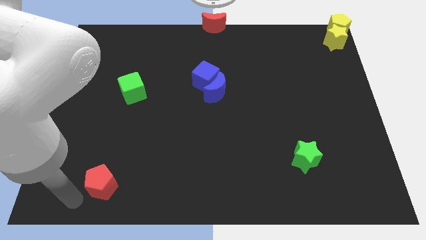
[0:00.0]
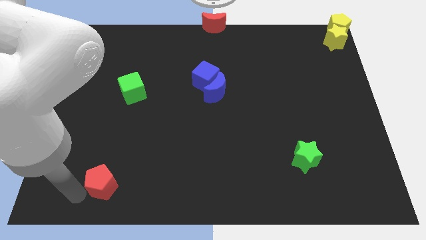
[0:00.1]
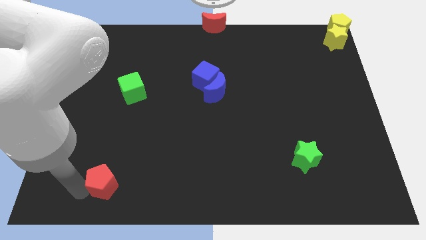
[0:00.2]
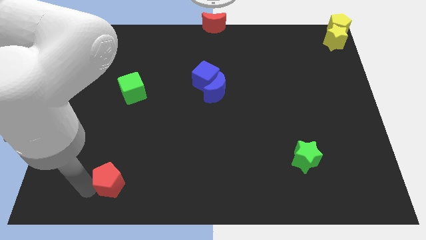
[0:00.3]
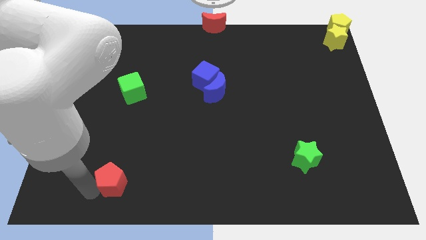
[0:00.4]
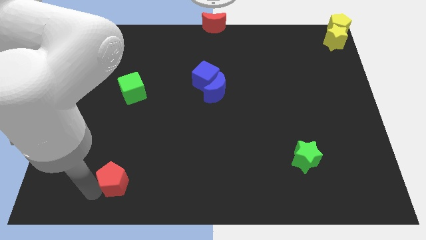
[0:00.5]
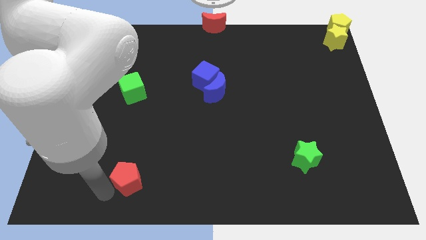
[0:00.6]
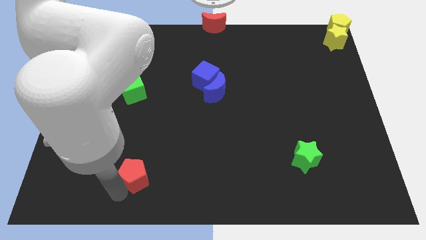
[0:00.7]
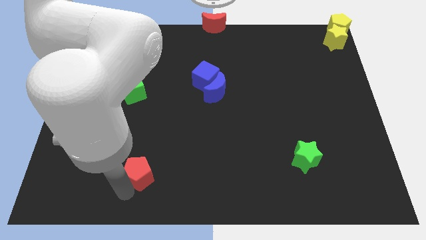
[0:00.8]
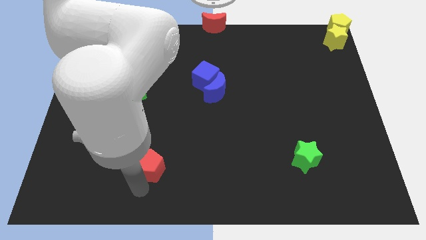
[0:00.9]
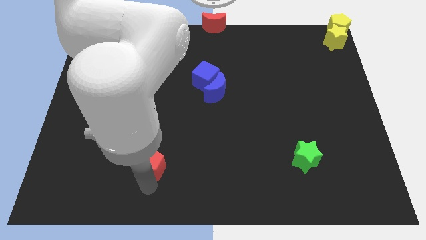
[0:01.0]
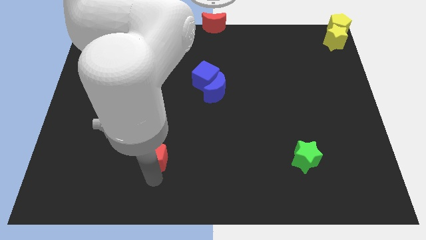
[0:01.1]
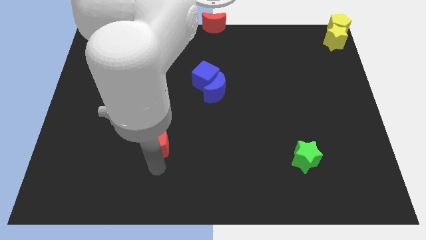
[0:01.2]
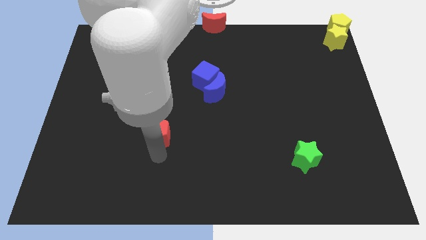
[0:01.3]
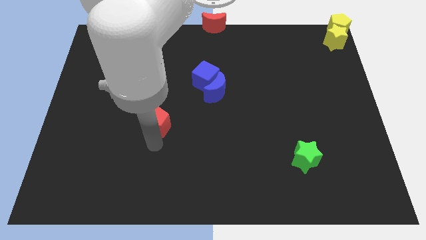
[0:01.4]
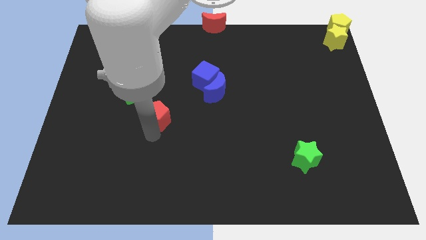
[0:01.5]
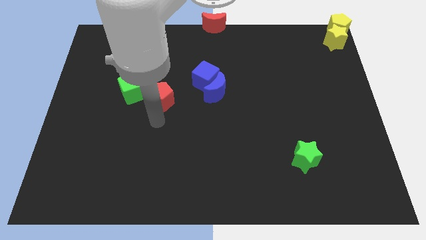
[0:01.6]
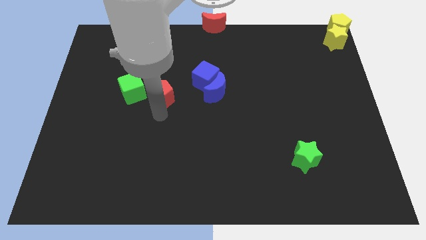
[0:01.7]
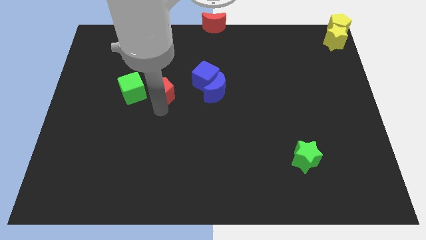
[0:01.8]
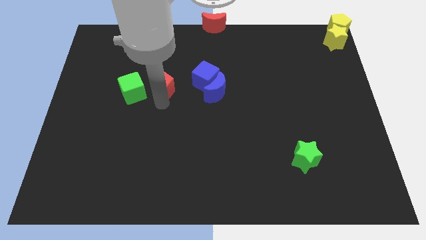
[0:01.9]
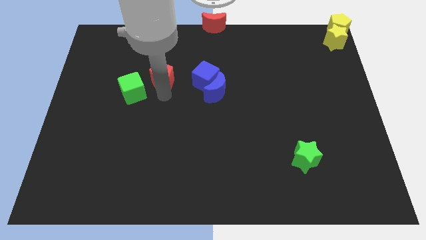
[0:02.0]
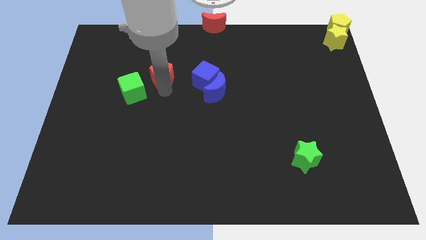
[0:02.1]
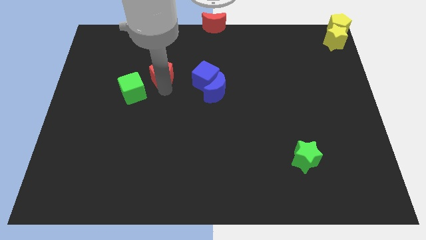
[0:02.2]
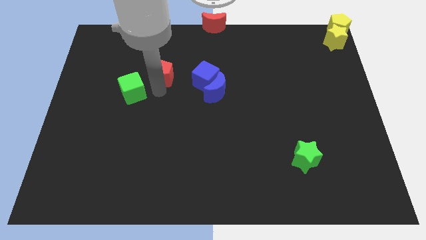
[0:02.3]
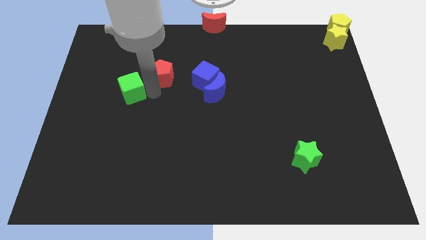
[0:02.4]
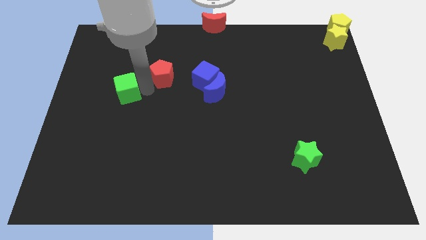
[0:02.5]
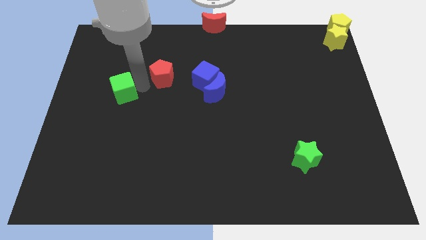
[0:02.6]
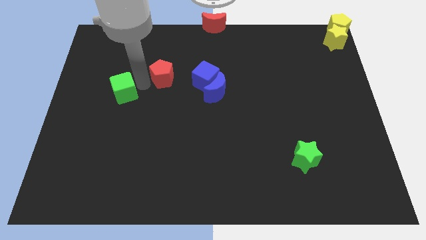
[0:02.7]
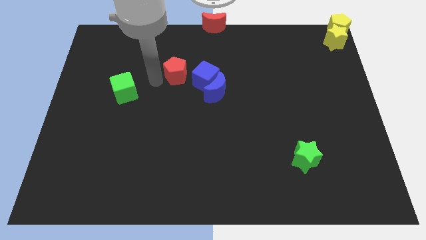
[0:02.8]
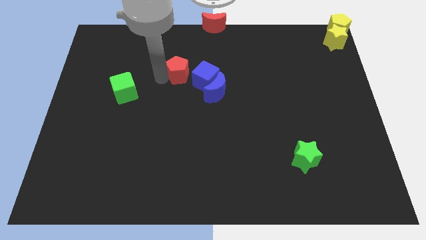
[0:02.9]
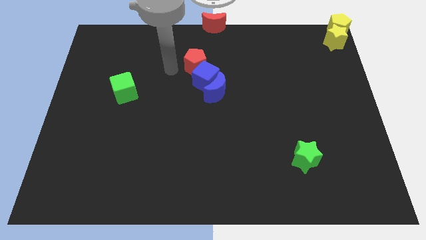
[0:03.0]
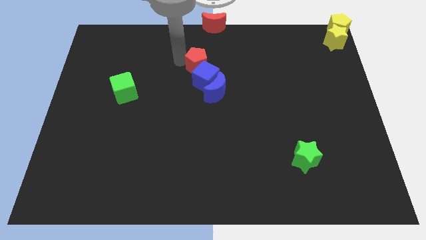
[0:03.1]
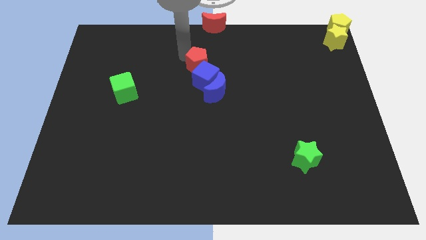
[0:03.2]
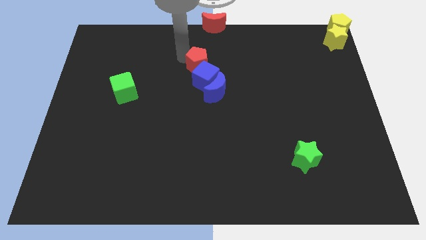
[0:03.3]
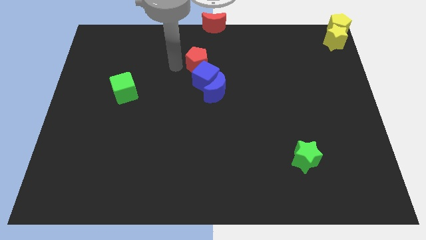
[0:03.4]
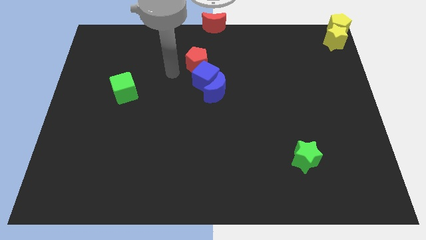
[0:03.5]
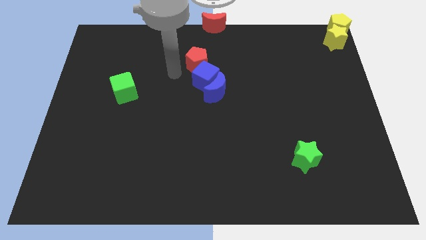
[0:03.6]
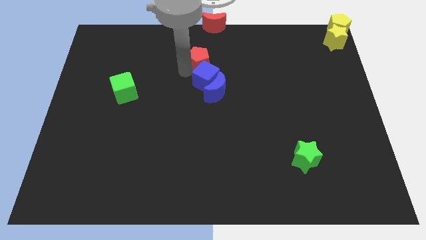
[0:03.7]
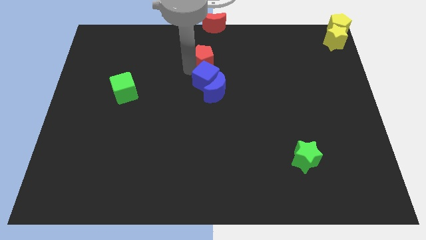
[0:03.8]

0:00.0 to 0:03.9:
place the red pentagon above the blue cube

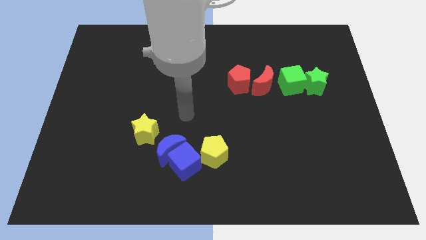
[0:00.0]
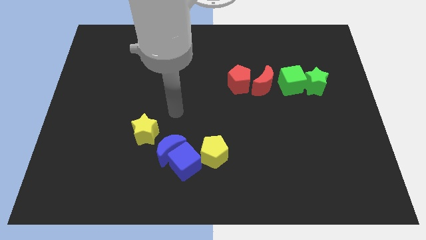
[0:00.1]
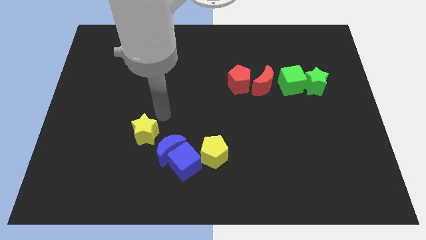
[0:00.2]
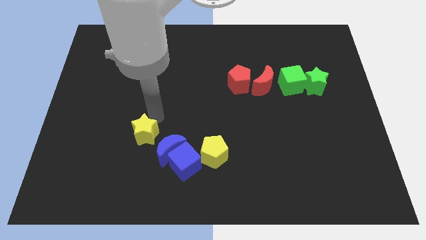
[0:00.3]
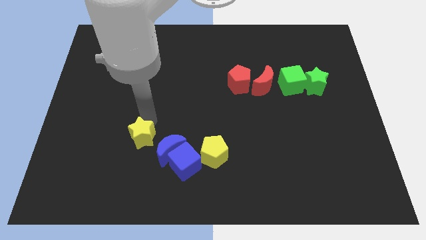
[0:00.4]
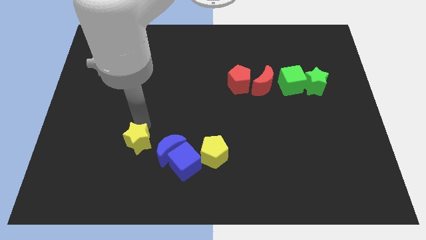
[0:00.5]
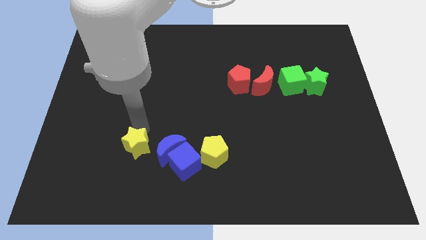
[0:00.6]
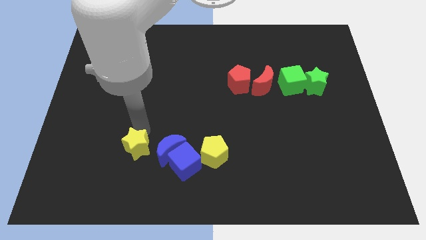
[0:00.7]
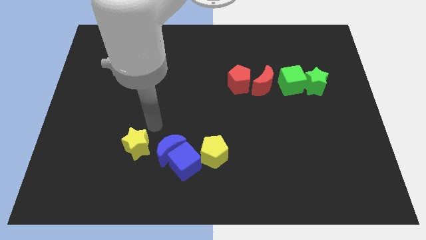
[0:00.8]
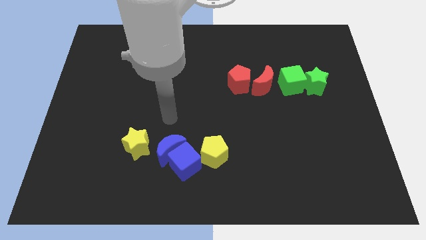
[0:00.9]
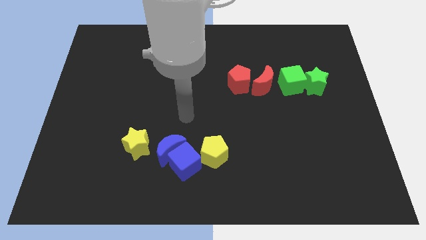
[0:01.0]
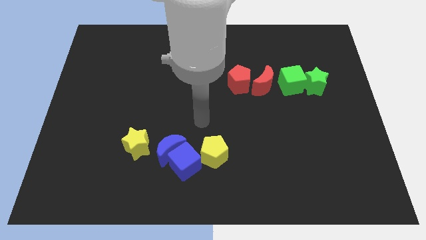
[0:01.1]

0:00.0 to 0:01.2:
move the yellow star to the left side of the blue crescent

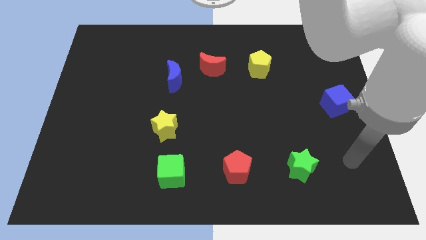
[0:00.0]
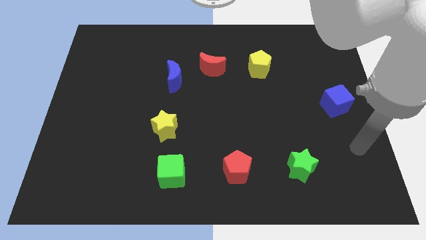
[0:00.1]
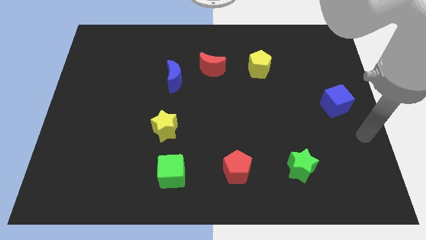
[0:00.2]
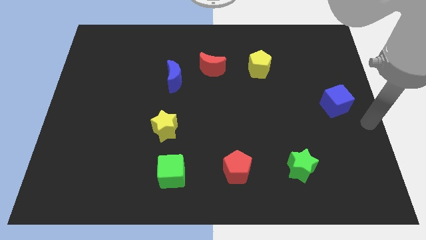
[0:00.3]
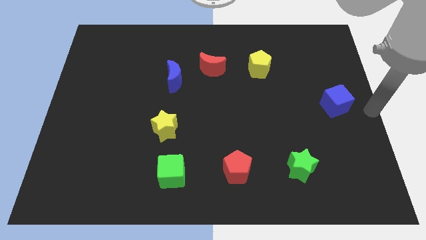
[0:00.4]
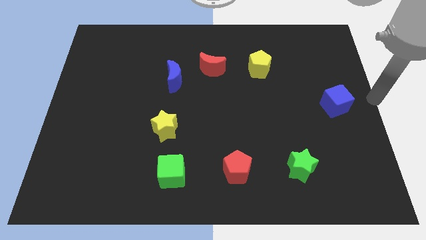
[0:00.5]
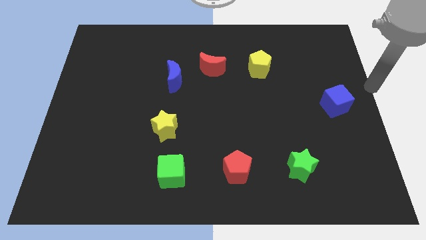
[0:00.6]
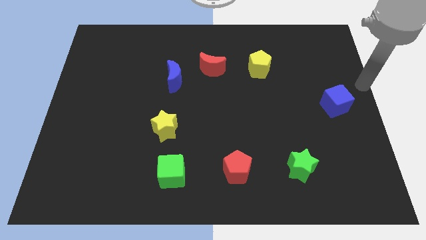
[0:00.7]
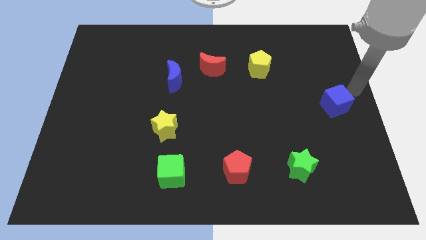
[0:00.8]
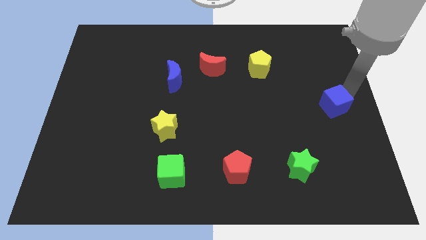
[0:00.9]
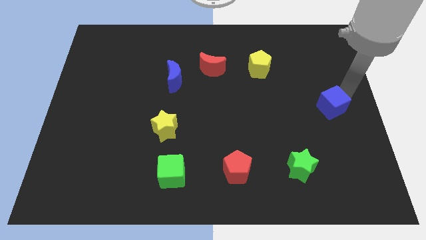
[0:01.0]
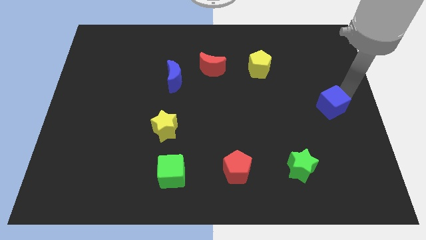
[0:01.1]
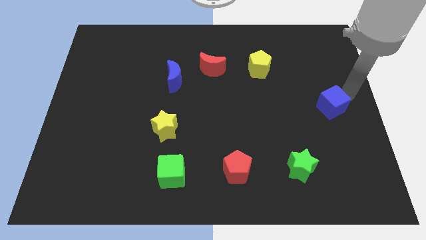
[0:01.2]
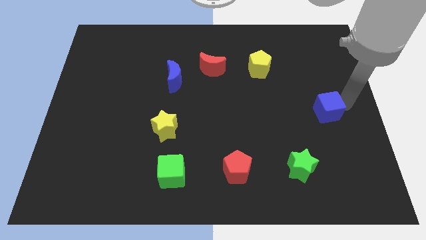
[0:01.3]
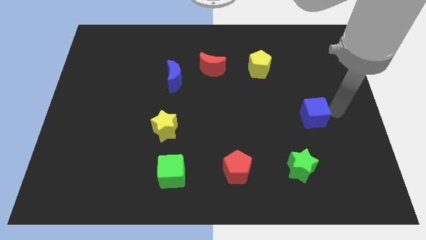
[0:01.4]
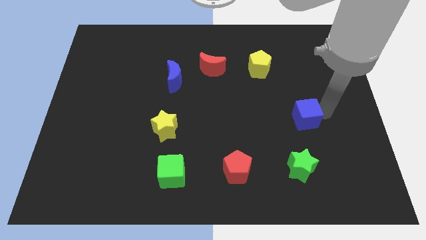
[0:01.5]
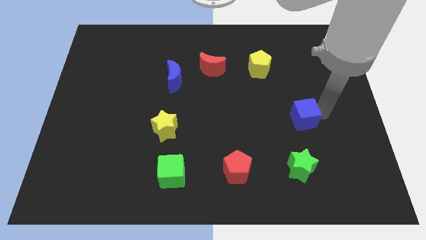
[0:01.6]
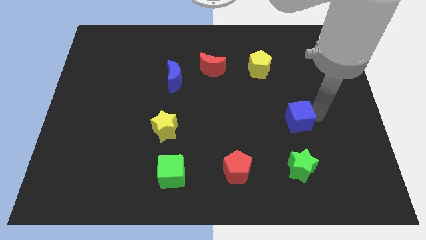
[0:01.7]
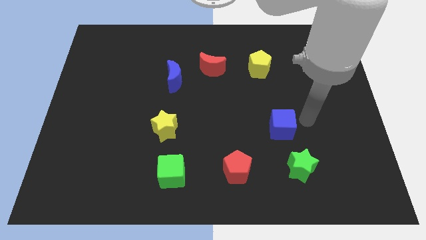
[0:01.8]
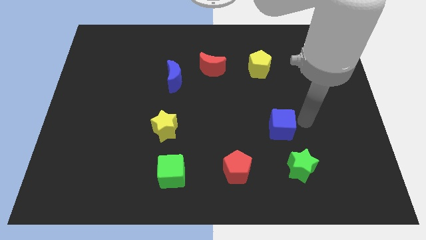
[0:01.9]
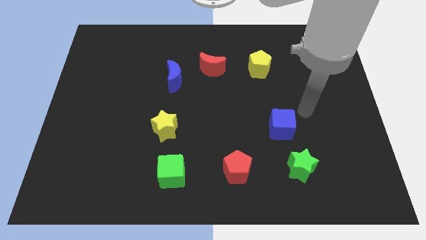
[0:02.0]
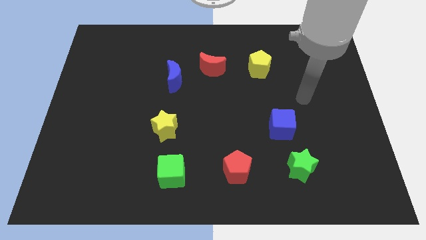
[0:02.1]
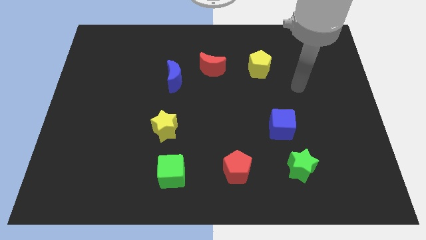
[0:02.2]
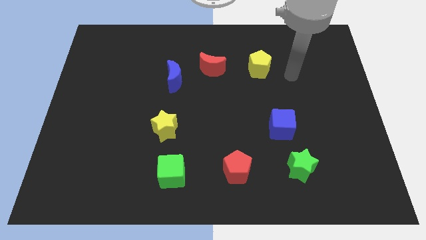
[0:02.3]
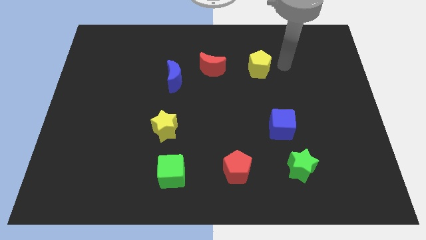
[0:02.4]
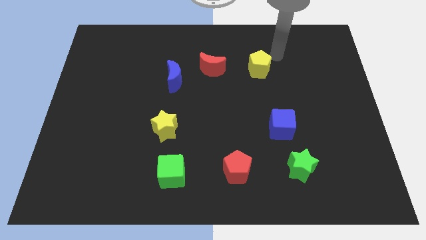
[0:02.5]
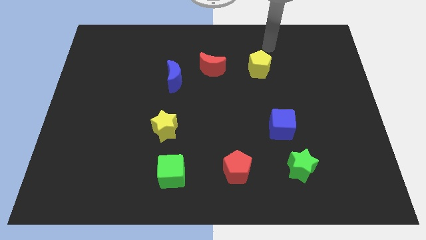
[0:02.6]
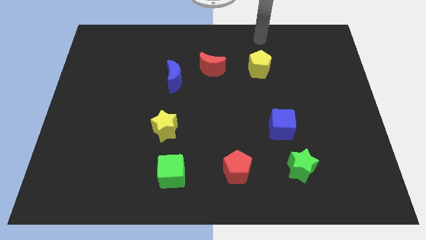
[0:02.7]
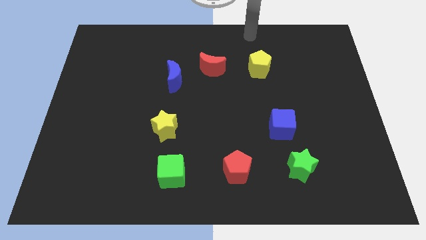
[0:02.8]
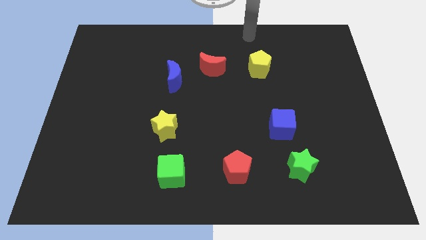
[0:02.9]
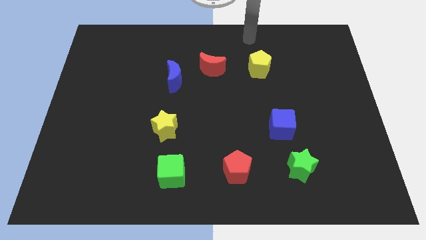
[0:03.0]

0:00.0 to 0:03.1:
push blue cube above green star

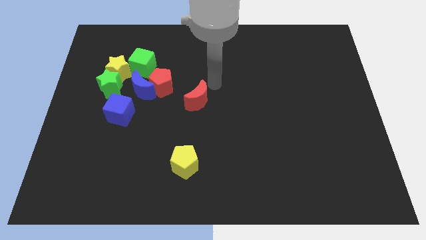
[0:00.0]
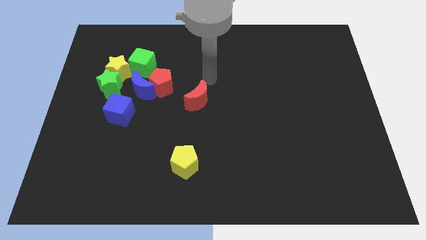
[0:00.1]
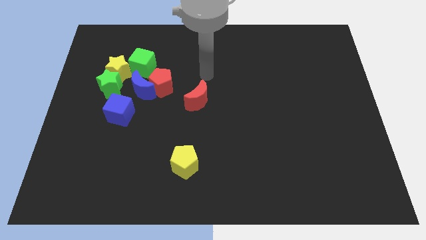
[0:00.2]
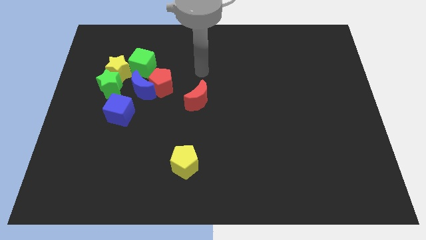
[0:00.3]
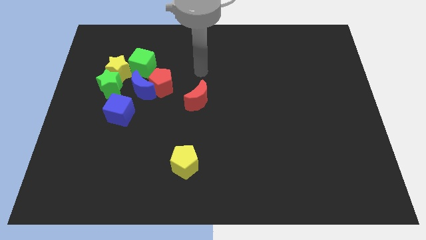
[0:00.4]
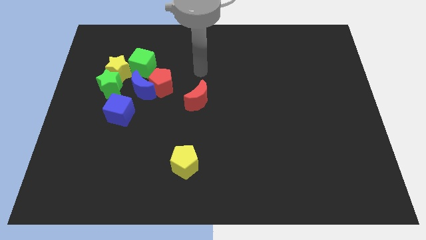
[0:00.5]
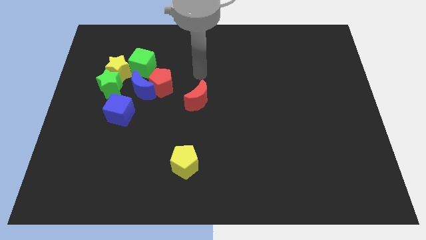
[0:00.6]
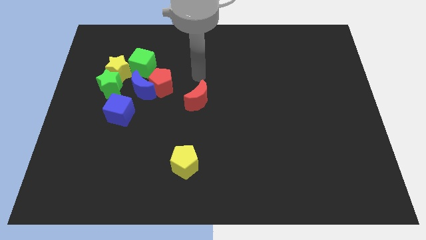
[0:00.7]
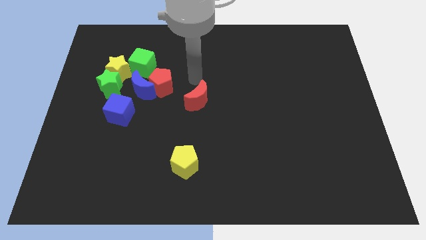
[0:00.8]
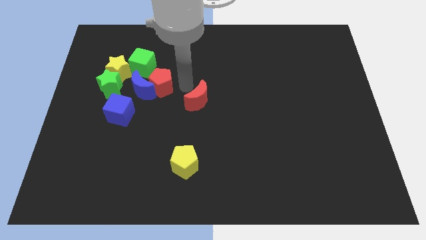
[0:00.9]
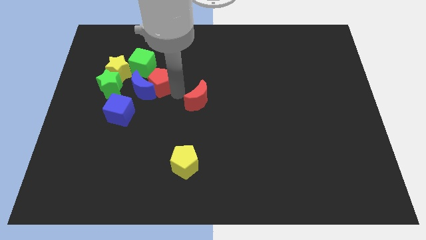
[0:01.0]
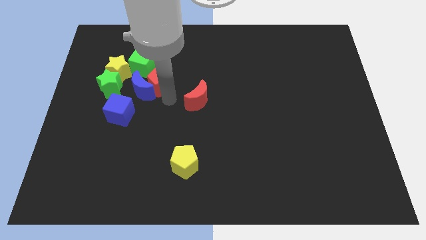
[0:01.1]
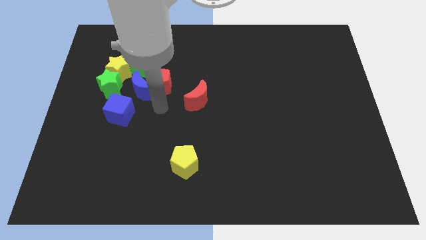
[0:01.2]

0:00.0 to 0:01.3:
move your arm to the bottom of the red pentagon
